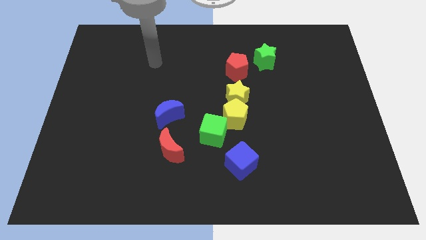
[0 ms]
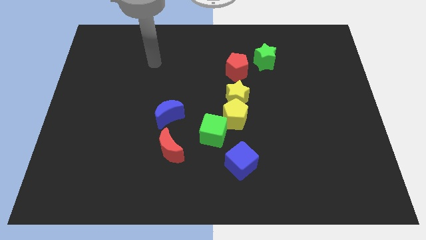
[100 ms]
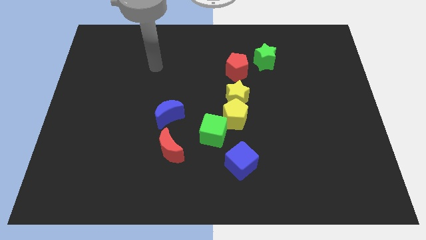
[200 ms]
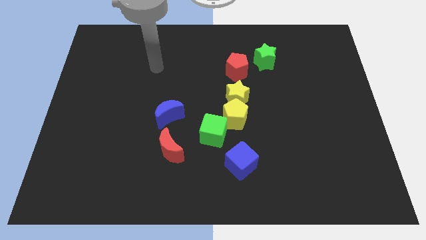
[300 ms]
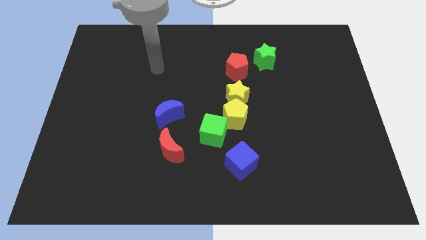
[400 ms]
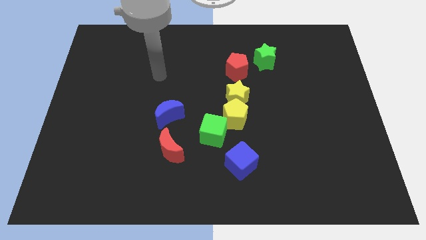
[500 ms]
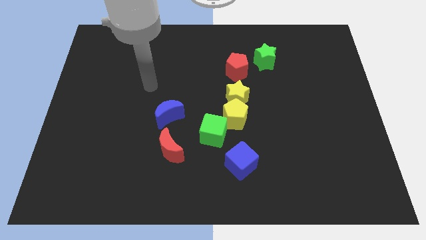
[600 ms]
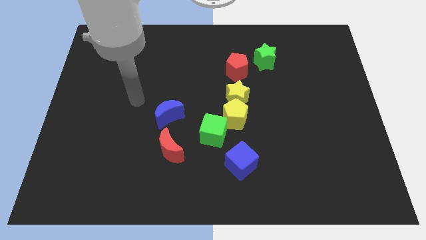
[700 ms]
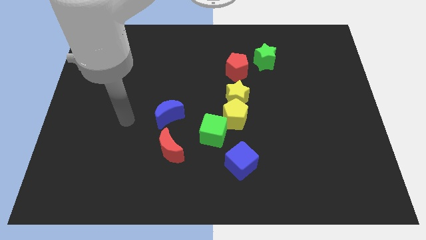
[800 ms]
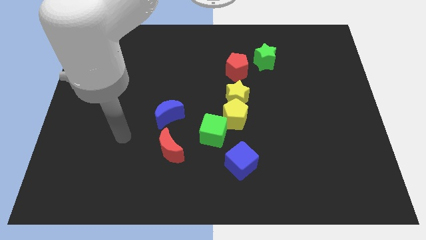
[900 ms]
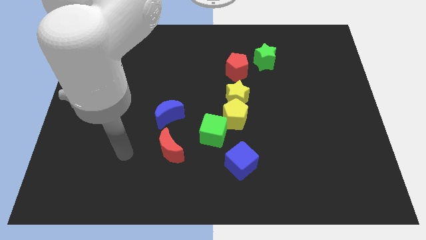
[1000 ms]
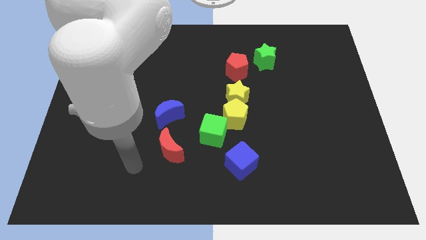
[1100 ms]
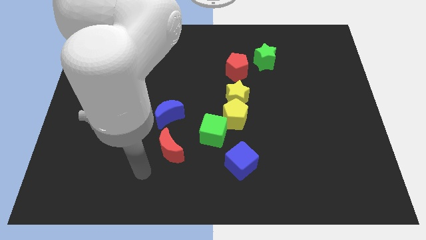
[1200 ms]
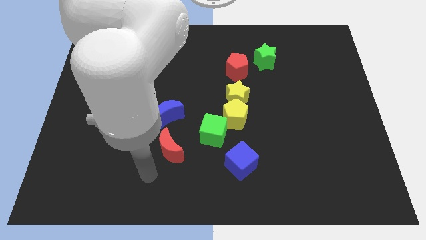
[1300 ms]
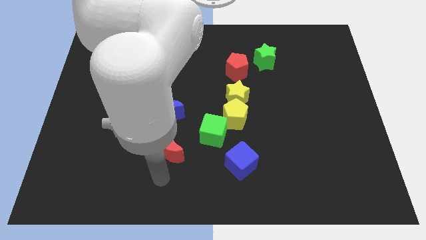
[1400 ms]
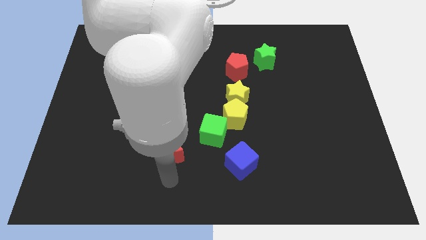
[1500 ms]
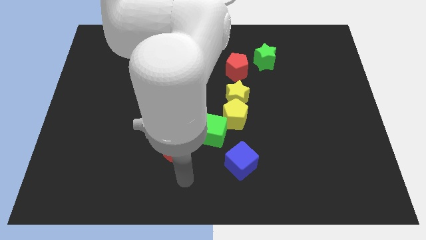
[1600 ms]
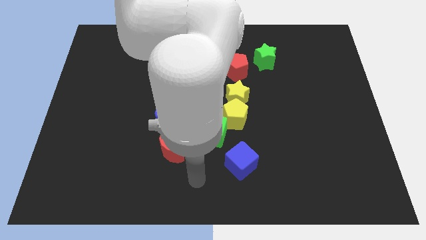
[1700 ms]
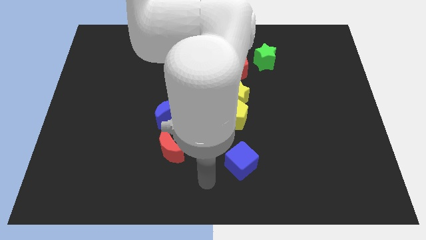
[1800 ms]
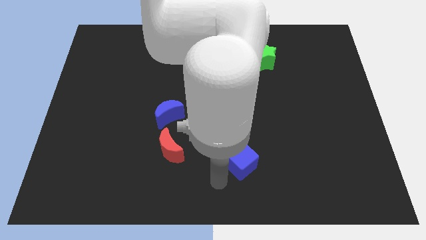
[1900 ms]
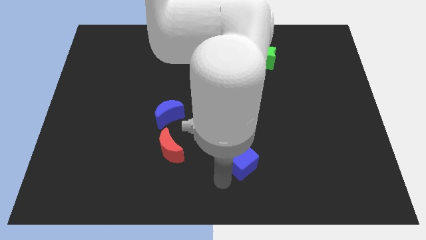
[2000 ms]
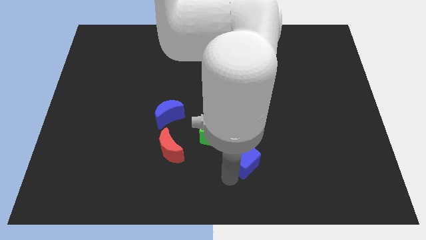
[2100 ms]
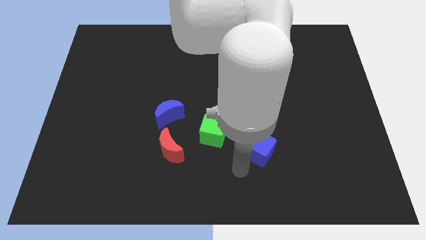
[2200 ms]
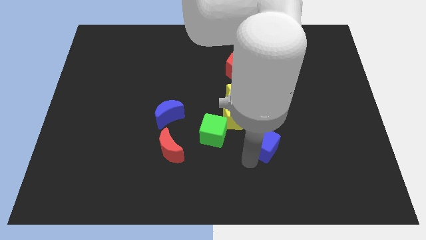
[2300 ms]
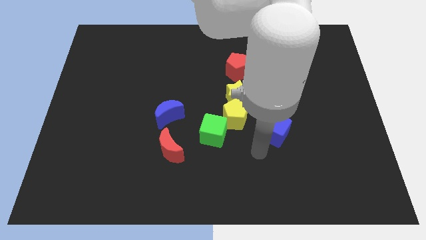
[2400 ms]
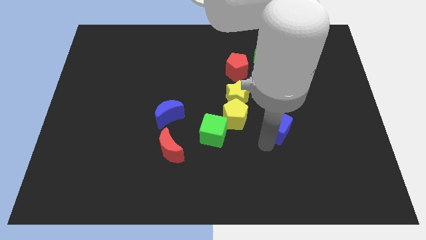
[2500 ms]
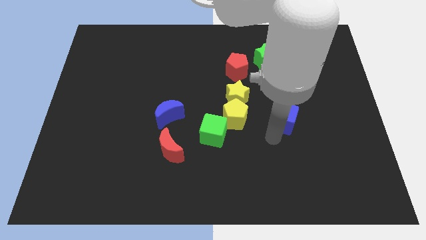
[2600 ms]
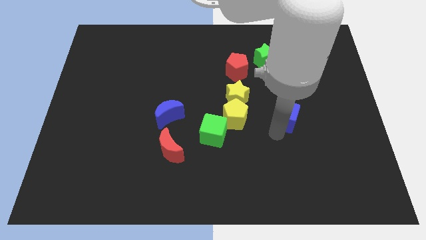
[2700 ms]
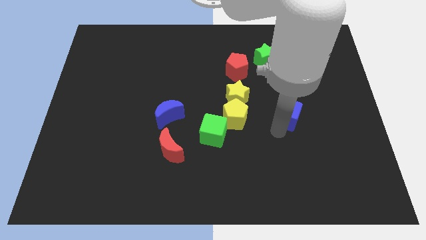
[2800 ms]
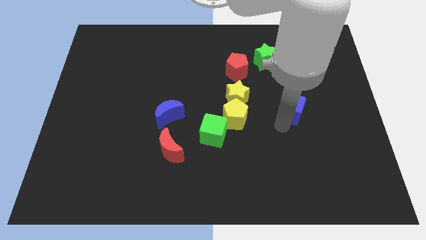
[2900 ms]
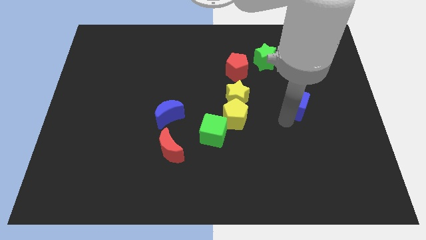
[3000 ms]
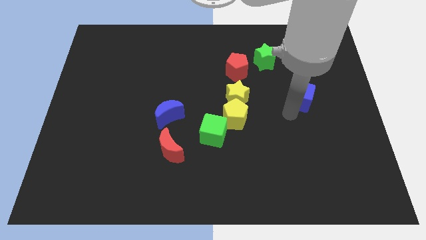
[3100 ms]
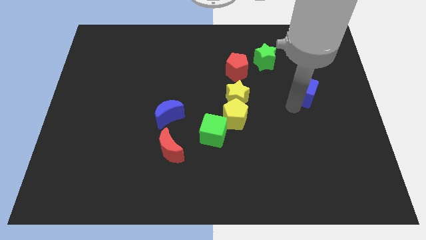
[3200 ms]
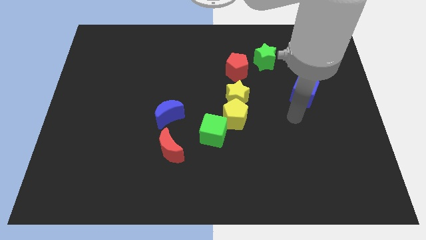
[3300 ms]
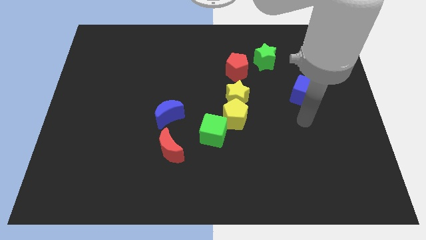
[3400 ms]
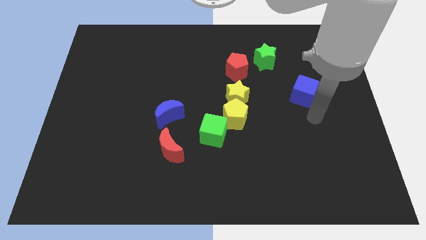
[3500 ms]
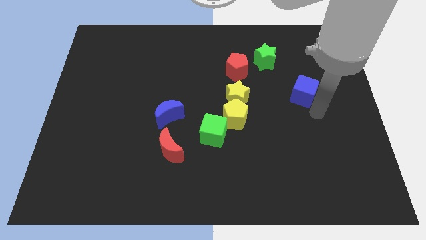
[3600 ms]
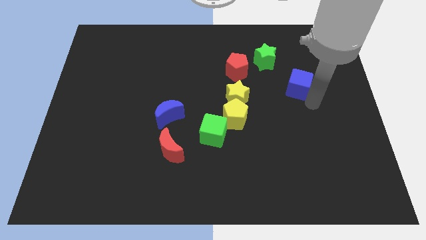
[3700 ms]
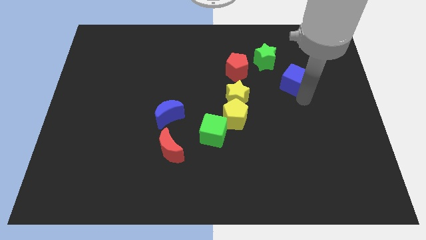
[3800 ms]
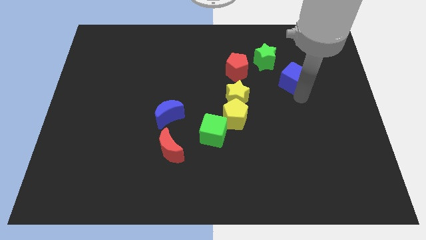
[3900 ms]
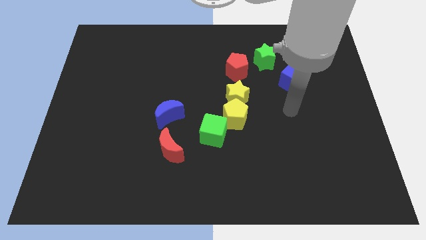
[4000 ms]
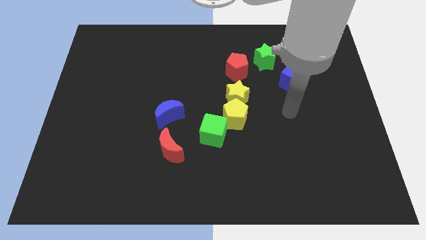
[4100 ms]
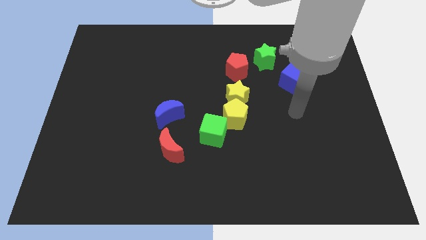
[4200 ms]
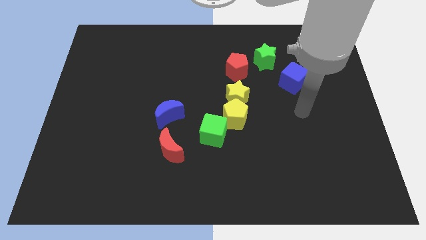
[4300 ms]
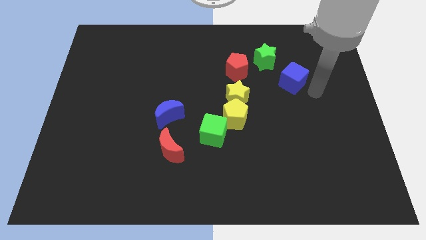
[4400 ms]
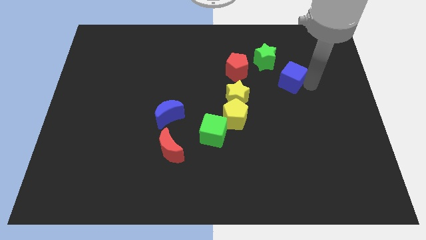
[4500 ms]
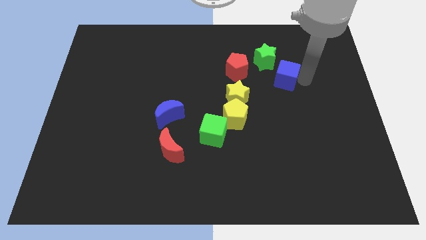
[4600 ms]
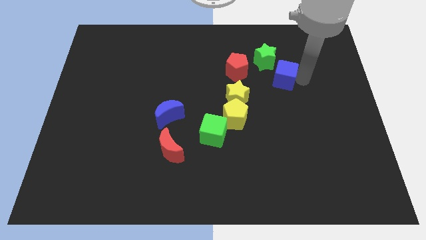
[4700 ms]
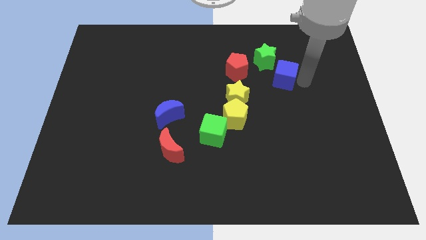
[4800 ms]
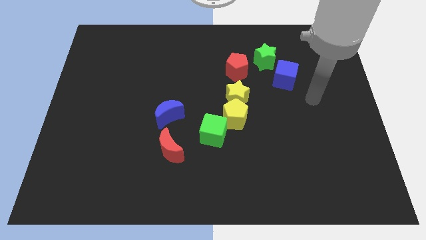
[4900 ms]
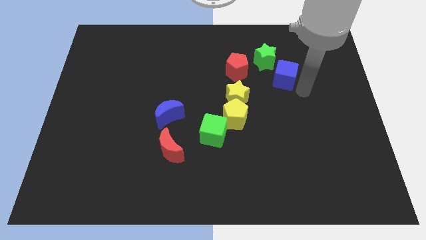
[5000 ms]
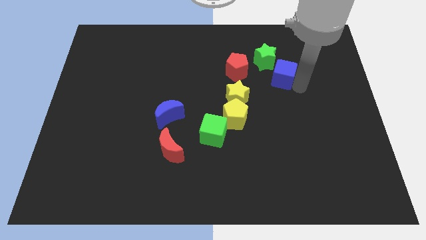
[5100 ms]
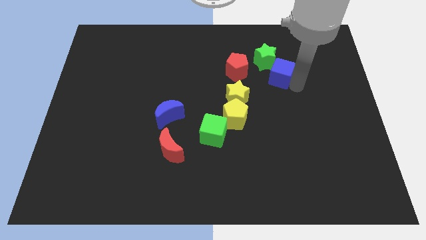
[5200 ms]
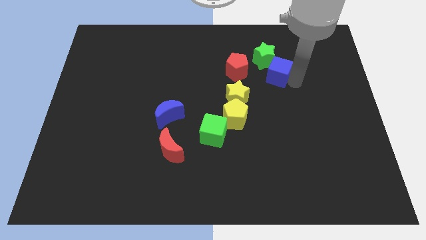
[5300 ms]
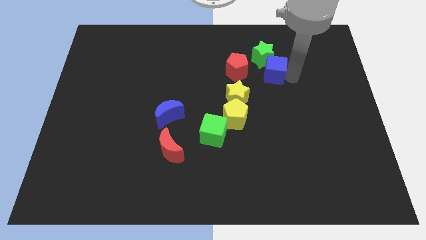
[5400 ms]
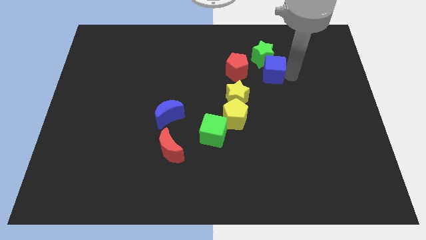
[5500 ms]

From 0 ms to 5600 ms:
slide the blue cube close to the green star

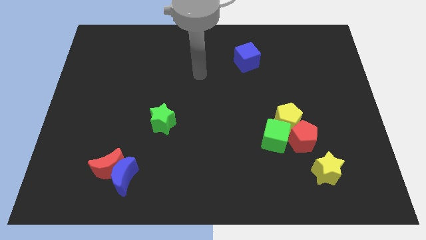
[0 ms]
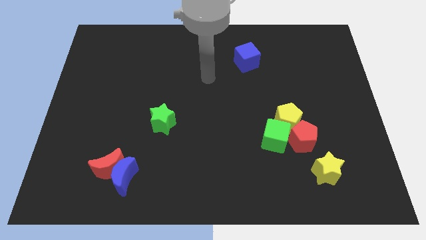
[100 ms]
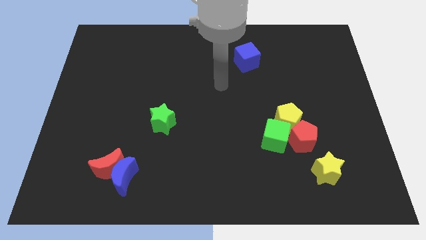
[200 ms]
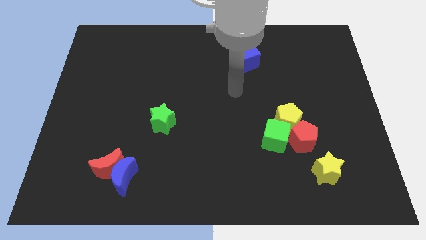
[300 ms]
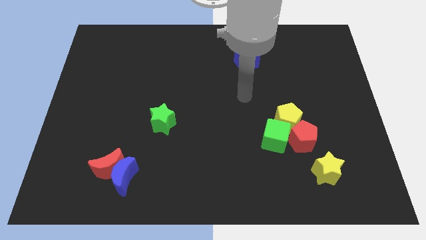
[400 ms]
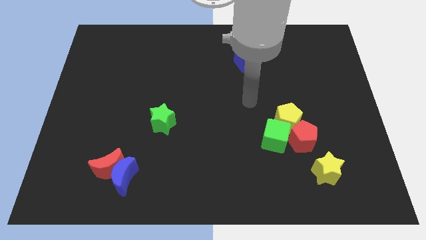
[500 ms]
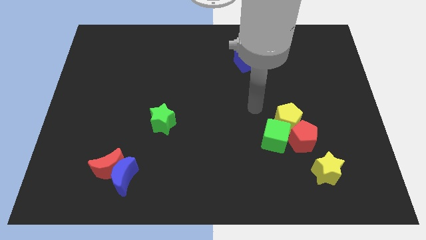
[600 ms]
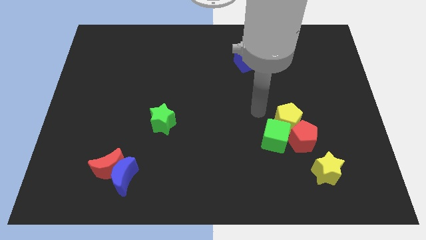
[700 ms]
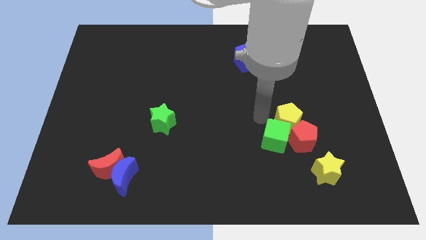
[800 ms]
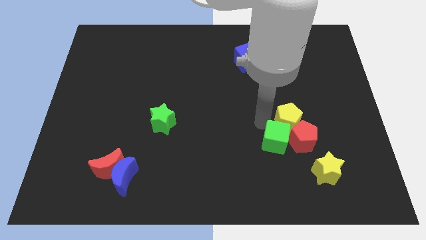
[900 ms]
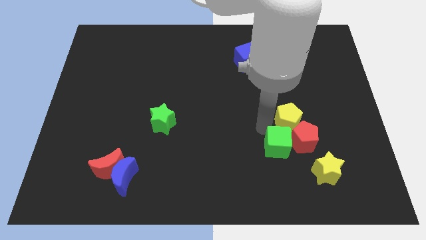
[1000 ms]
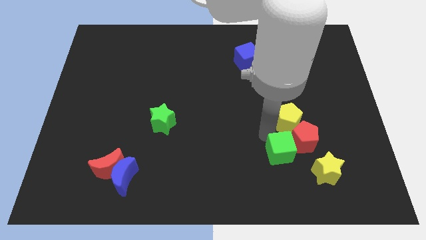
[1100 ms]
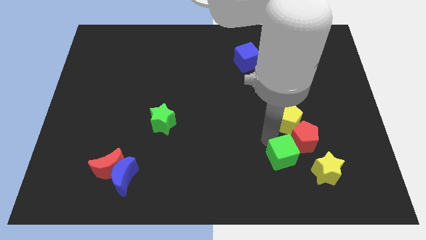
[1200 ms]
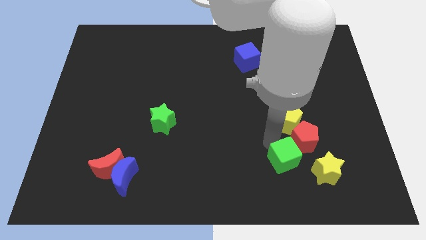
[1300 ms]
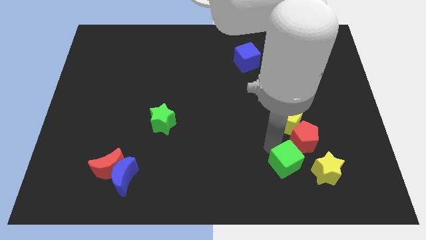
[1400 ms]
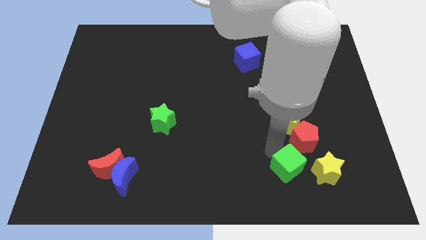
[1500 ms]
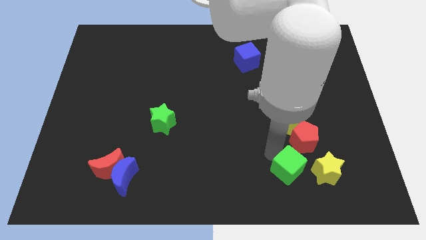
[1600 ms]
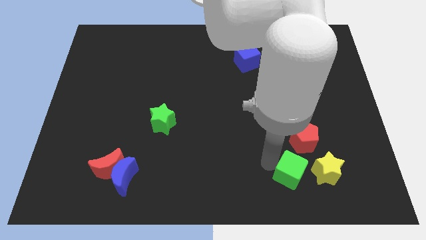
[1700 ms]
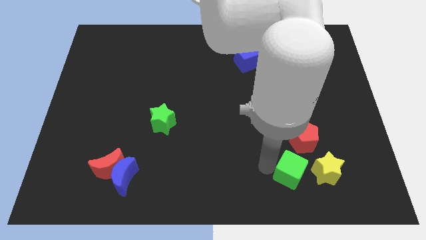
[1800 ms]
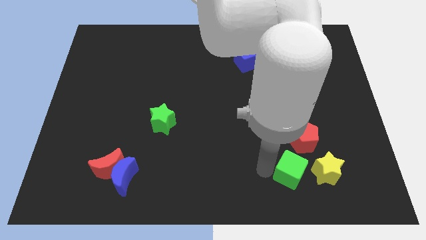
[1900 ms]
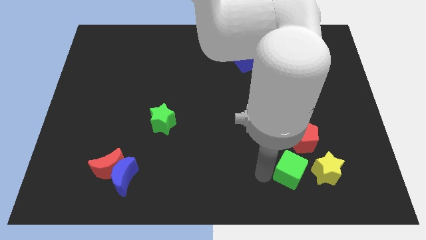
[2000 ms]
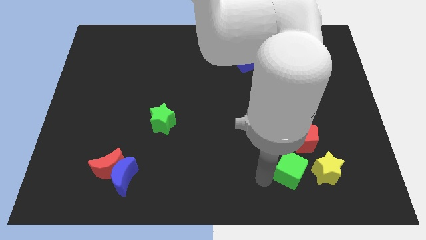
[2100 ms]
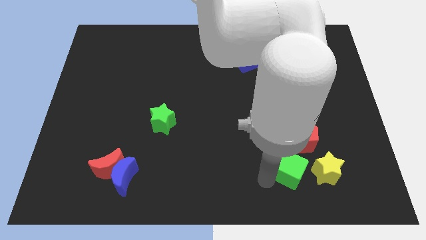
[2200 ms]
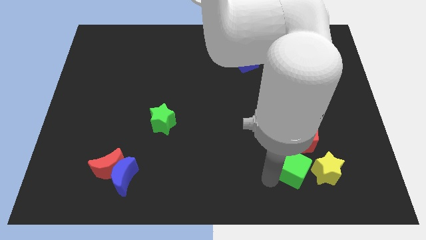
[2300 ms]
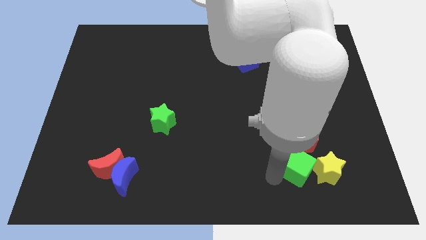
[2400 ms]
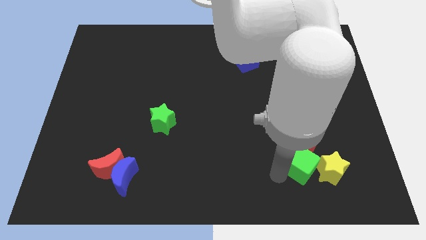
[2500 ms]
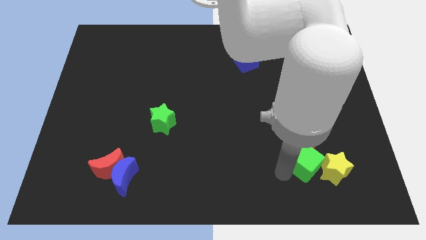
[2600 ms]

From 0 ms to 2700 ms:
move the green cube close to the yellow star

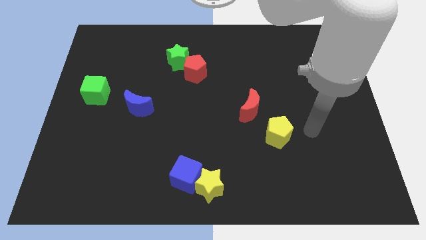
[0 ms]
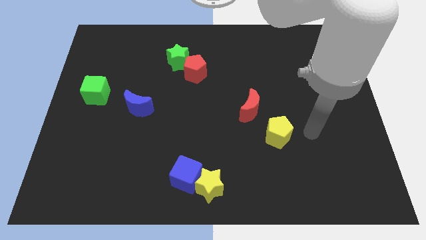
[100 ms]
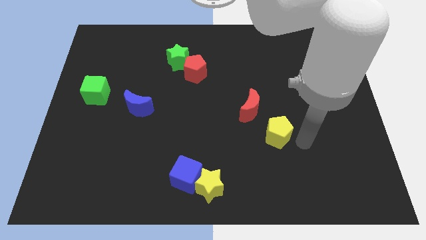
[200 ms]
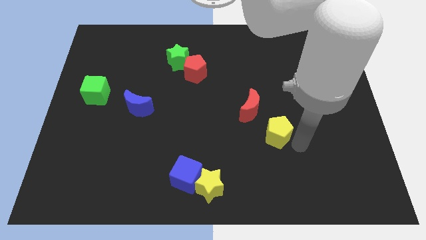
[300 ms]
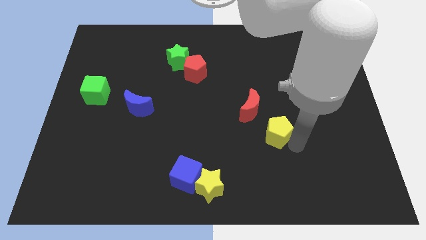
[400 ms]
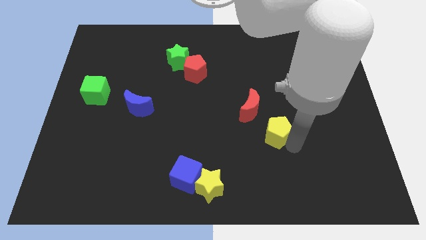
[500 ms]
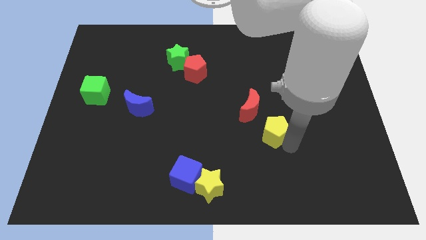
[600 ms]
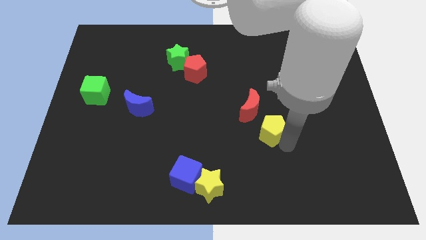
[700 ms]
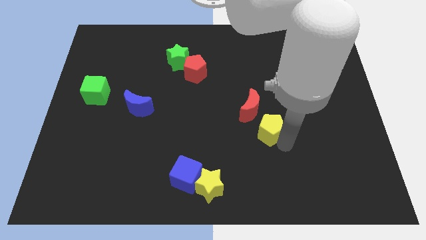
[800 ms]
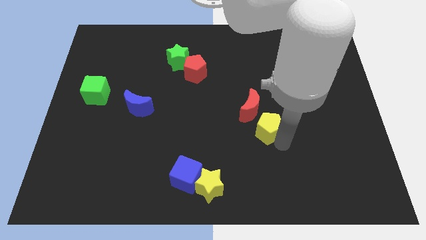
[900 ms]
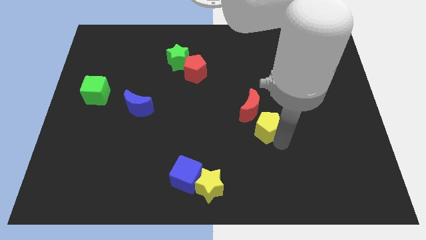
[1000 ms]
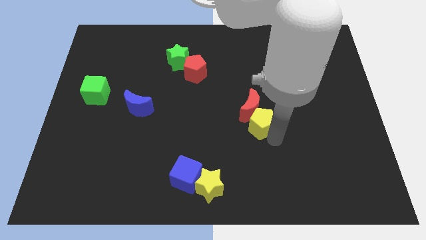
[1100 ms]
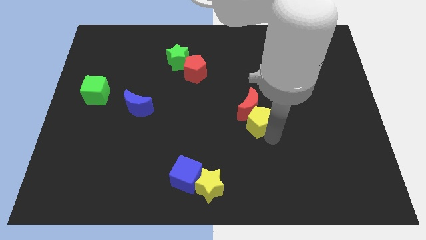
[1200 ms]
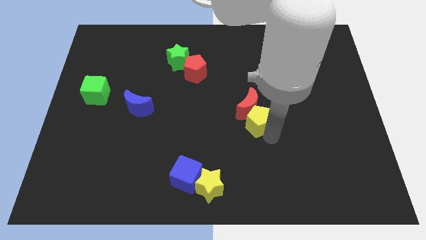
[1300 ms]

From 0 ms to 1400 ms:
put the yellow pentagon close to the red moon
